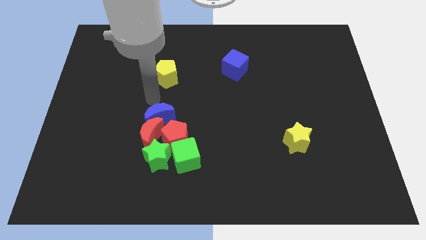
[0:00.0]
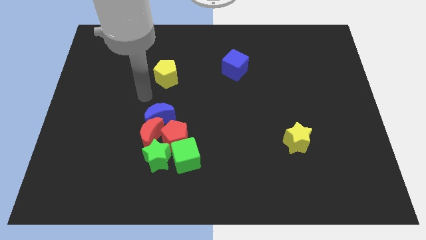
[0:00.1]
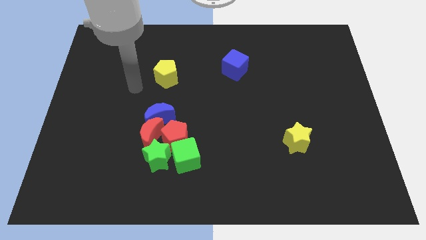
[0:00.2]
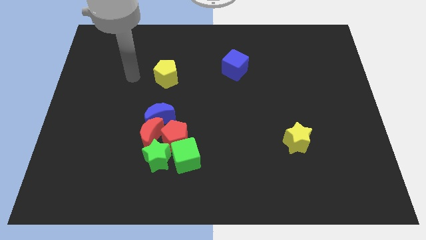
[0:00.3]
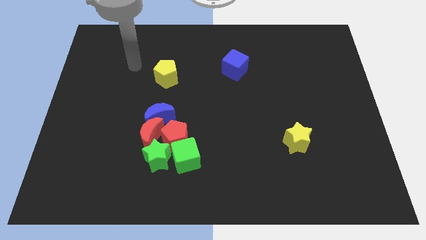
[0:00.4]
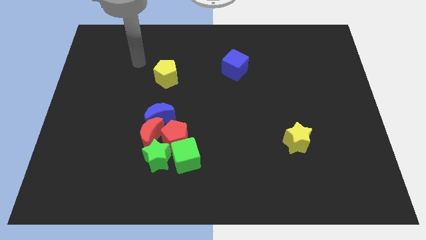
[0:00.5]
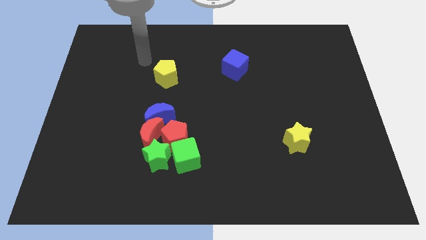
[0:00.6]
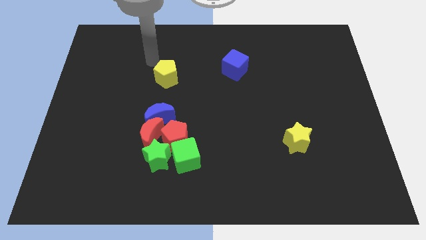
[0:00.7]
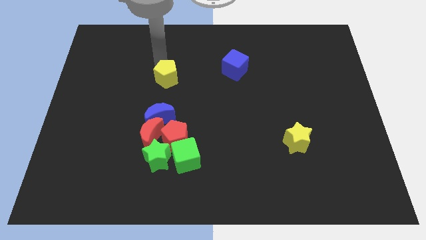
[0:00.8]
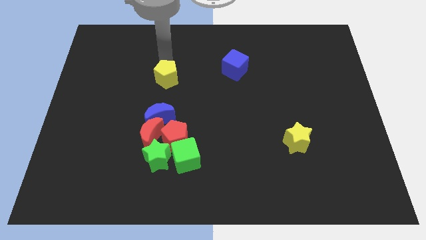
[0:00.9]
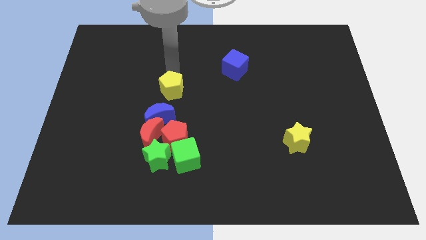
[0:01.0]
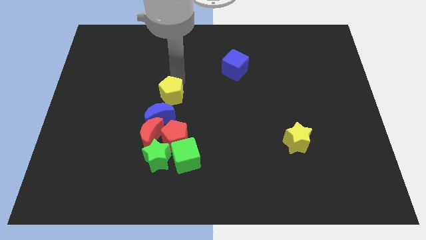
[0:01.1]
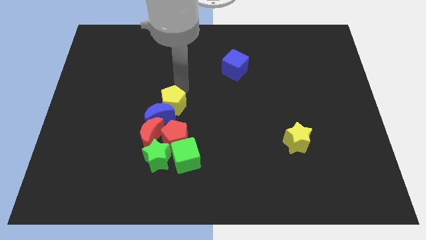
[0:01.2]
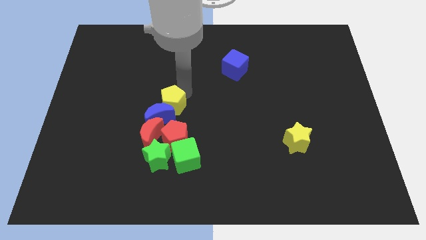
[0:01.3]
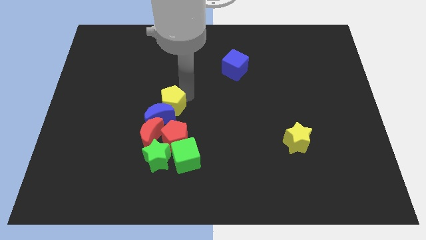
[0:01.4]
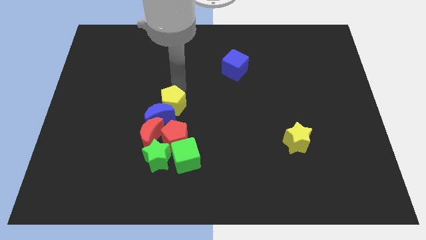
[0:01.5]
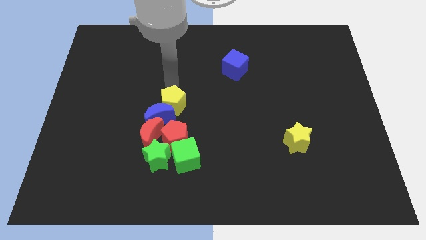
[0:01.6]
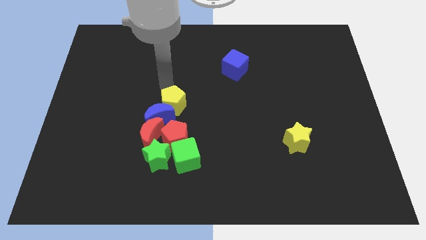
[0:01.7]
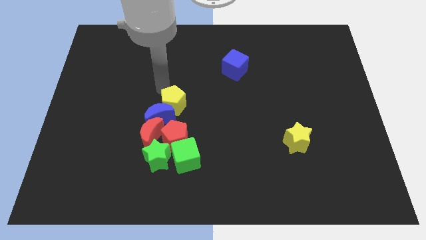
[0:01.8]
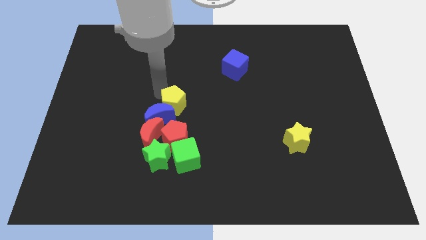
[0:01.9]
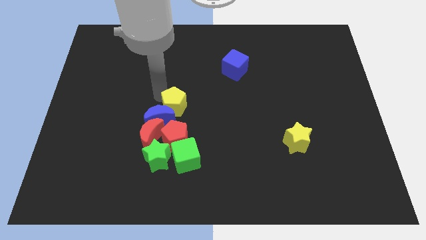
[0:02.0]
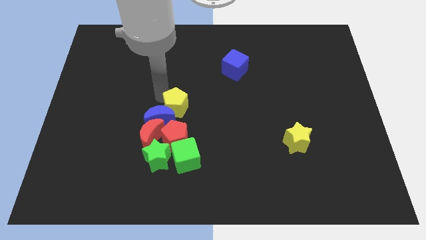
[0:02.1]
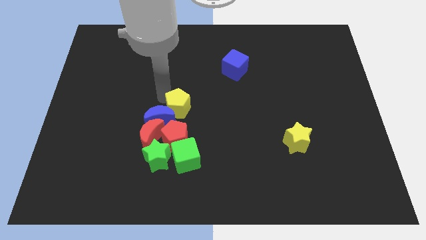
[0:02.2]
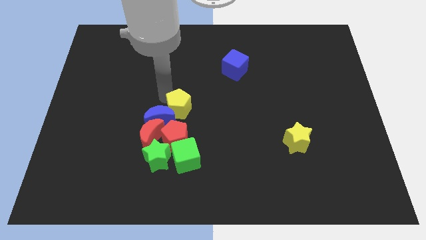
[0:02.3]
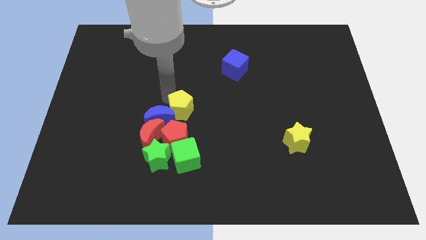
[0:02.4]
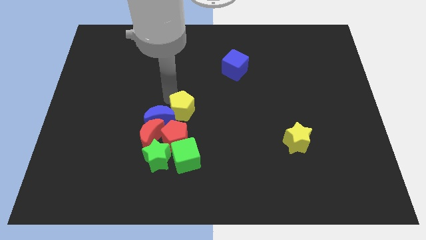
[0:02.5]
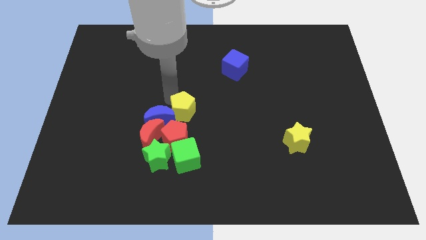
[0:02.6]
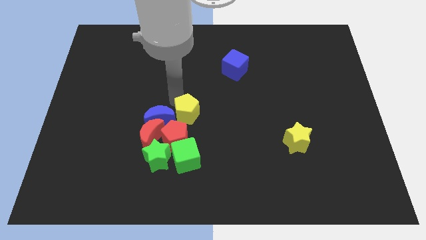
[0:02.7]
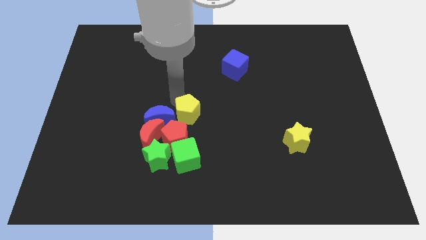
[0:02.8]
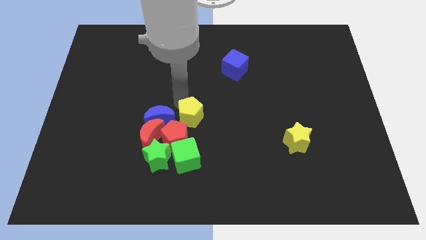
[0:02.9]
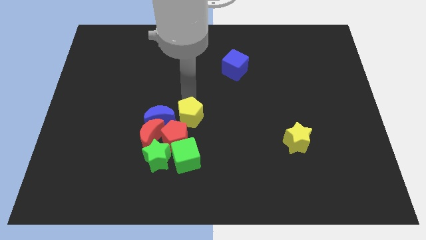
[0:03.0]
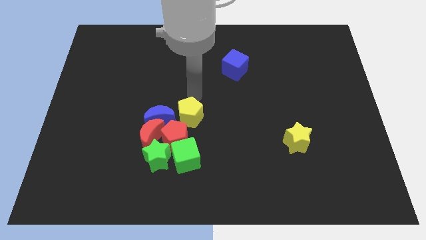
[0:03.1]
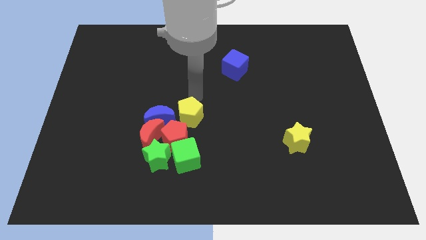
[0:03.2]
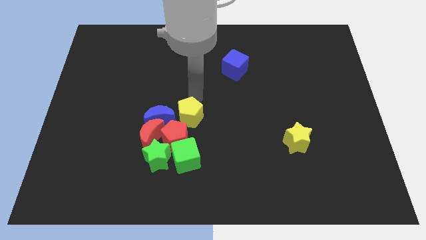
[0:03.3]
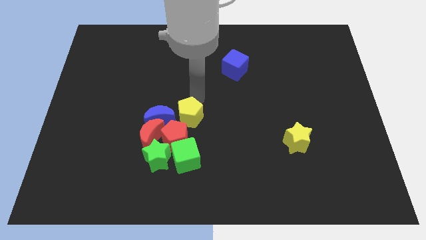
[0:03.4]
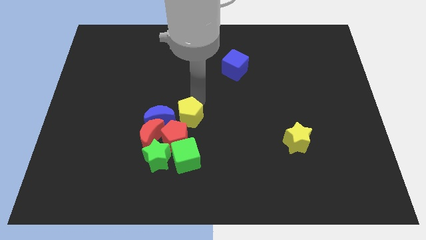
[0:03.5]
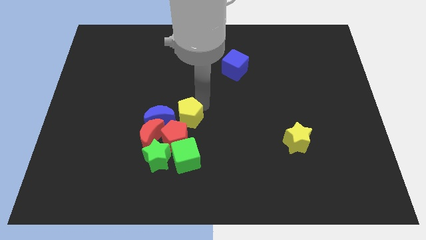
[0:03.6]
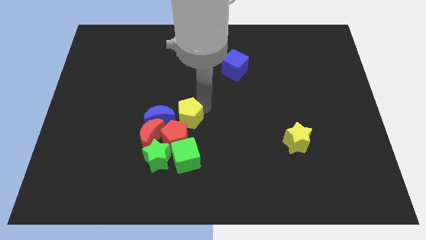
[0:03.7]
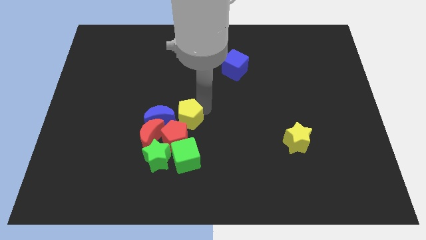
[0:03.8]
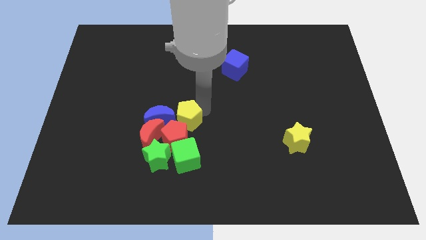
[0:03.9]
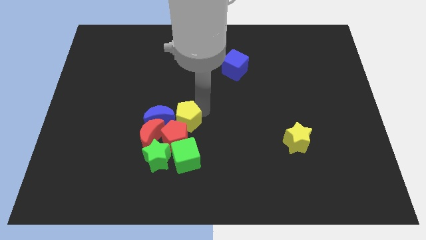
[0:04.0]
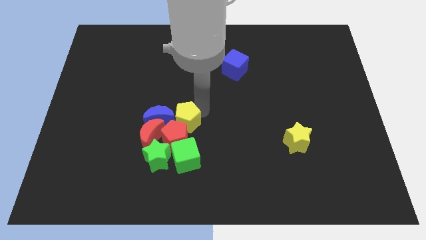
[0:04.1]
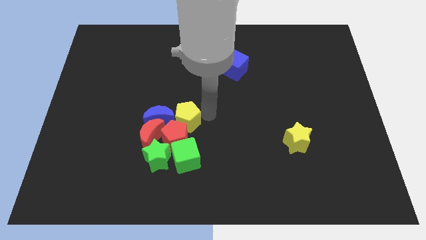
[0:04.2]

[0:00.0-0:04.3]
place the yellow pentagon close to blue crescent

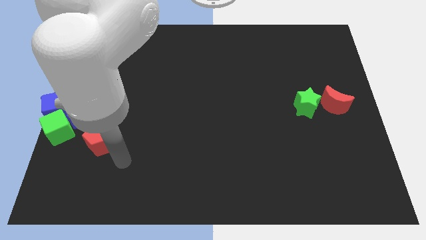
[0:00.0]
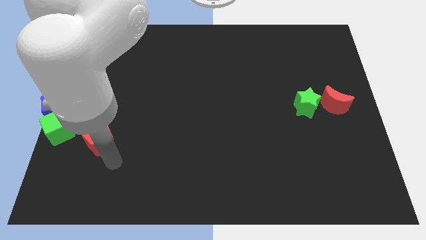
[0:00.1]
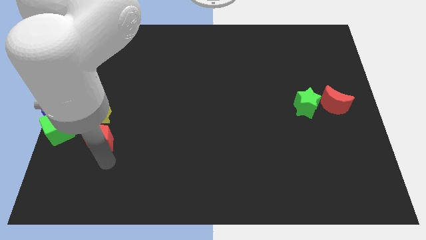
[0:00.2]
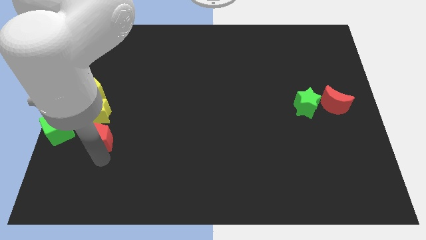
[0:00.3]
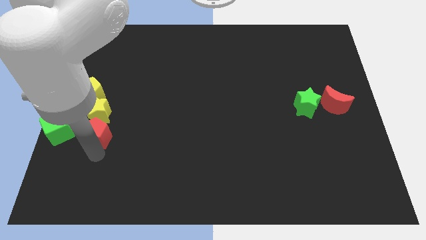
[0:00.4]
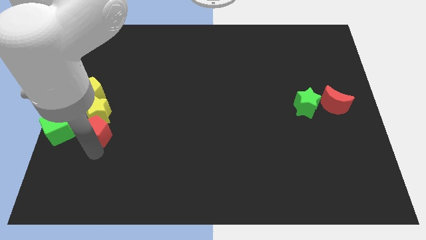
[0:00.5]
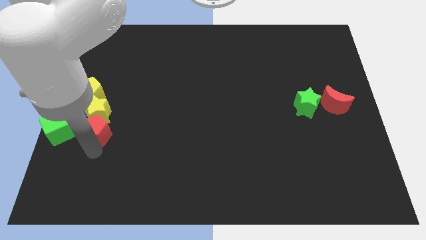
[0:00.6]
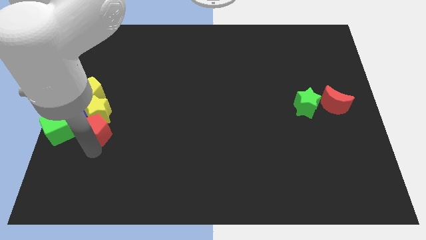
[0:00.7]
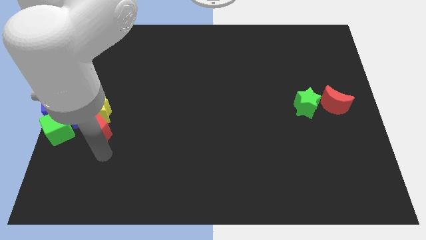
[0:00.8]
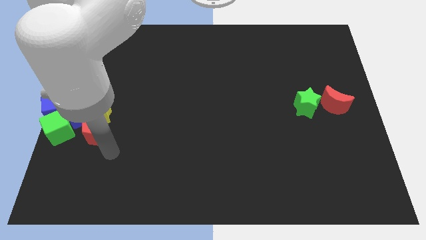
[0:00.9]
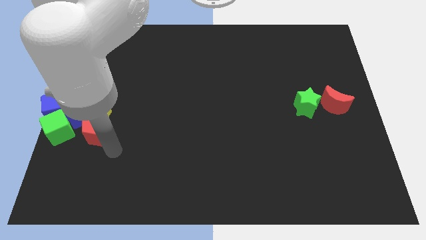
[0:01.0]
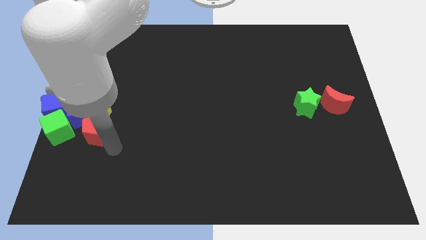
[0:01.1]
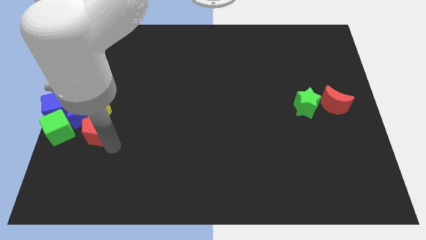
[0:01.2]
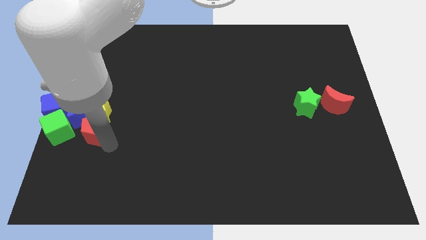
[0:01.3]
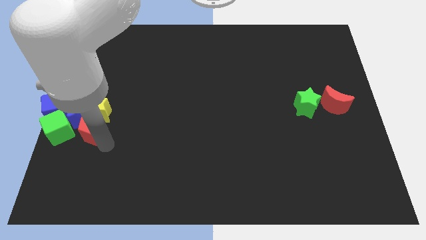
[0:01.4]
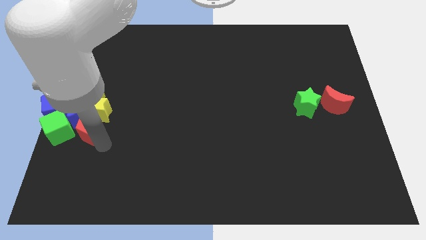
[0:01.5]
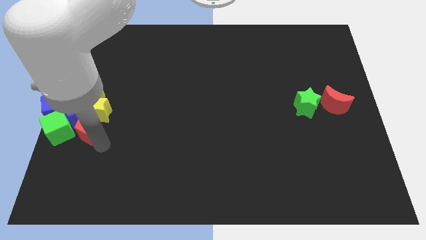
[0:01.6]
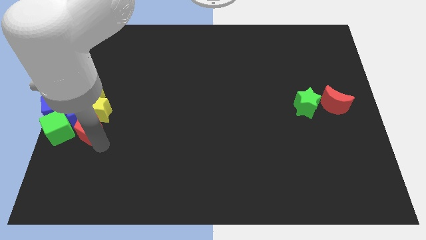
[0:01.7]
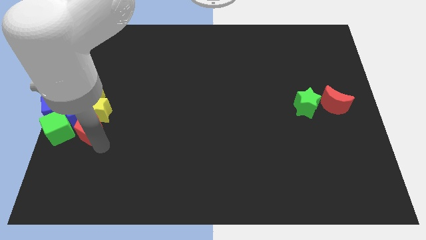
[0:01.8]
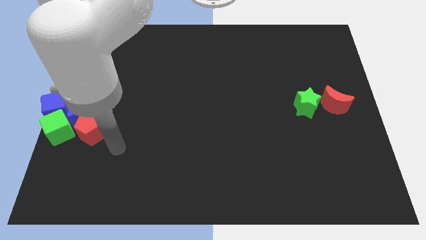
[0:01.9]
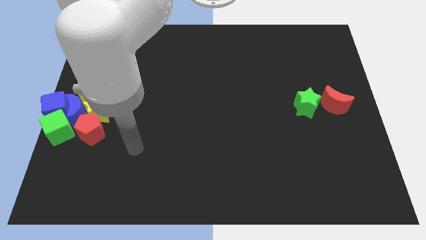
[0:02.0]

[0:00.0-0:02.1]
push red pentagon into the group of blocks at the center left

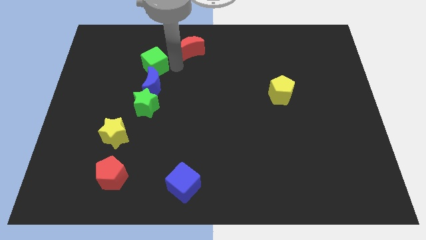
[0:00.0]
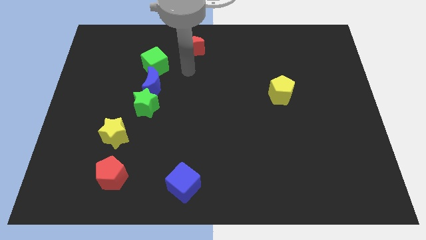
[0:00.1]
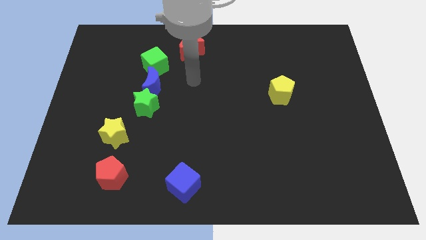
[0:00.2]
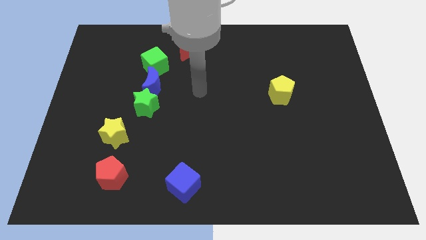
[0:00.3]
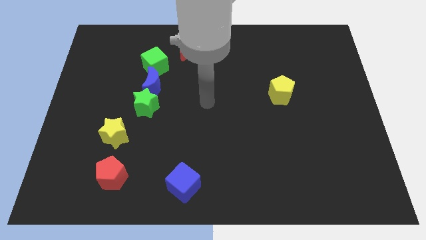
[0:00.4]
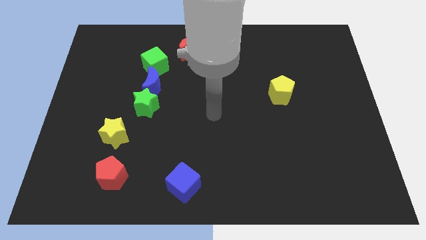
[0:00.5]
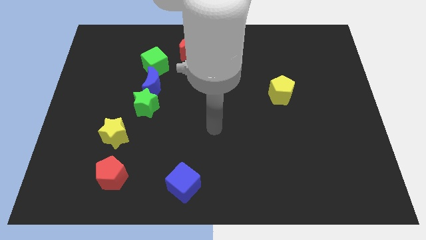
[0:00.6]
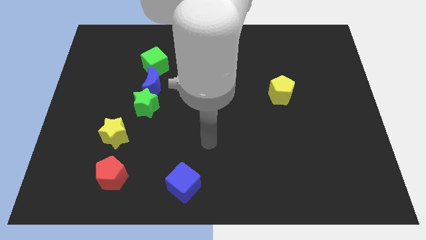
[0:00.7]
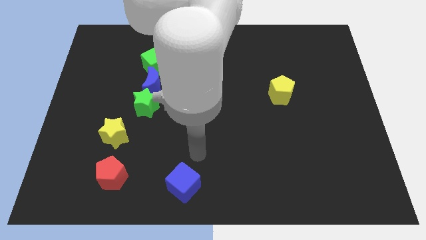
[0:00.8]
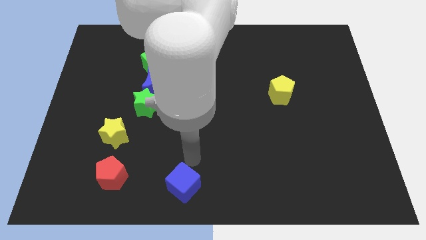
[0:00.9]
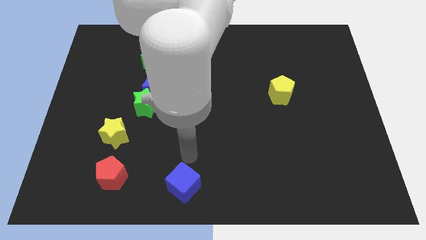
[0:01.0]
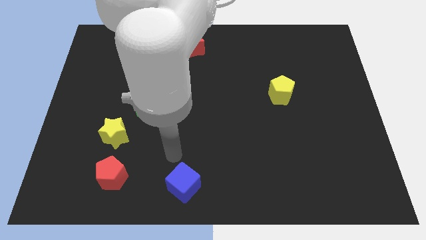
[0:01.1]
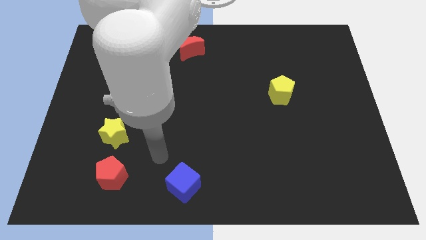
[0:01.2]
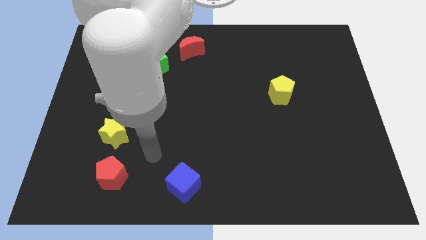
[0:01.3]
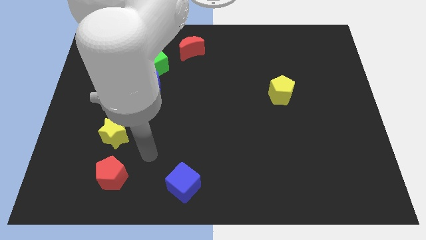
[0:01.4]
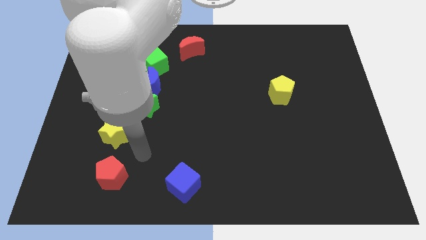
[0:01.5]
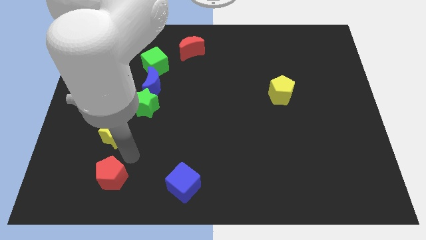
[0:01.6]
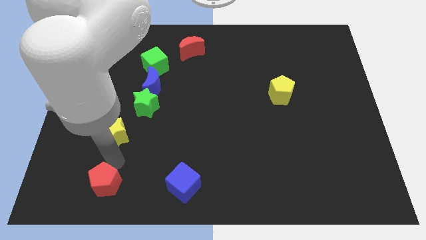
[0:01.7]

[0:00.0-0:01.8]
place your arm above red pentagon

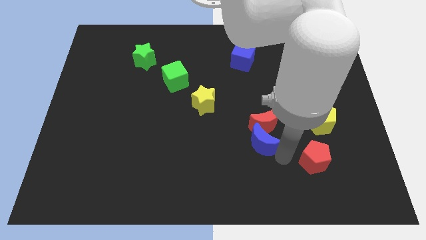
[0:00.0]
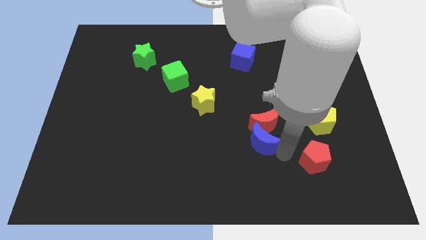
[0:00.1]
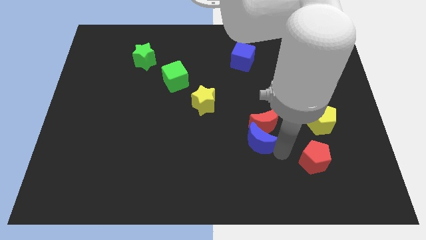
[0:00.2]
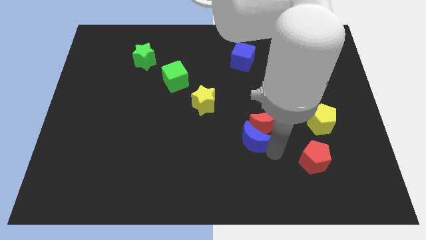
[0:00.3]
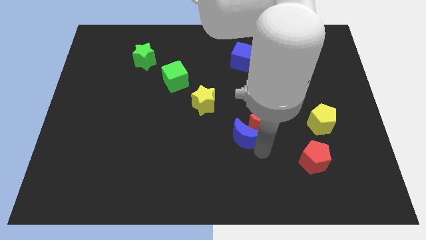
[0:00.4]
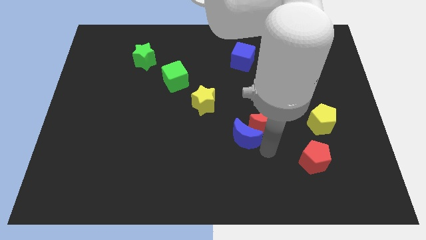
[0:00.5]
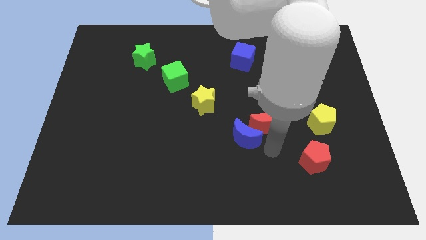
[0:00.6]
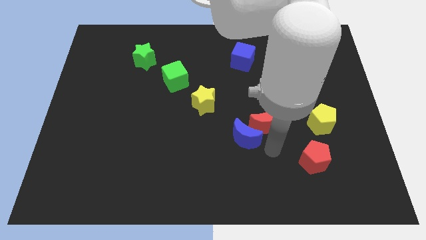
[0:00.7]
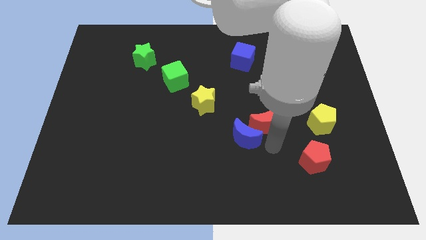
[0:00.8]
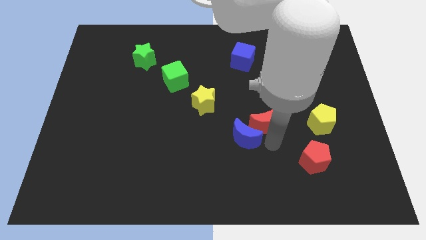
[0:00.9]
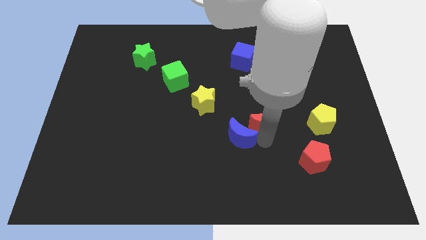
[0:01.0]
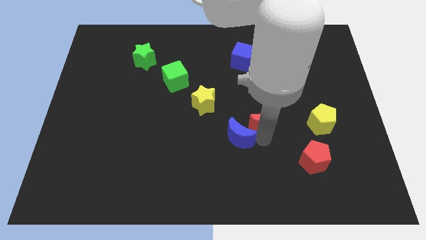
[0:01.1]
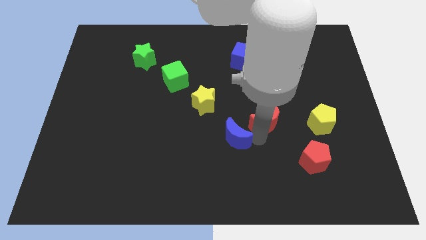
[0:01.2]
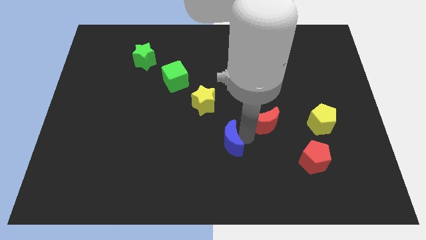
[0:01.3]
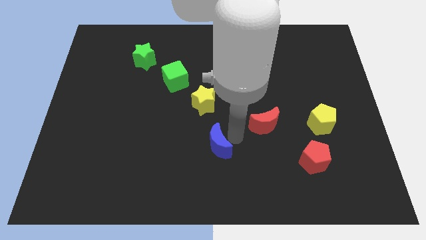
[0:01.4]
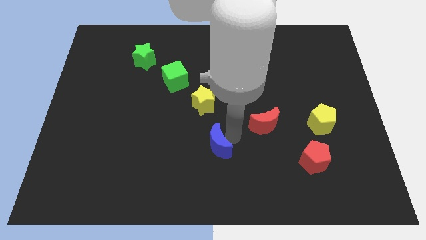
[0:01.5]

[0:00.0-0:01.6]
separate the blue crescent from the red crescent
